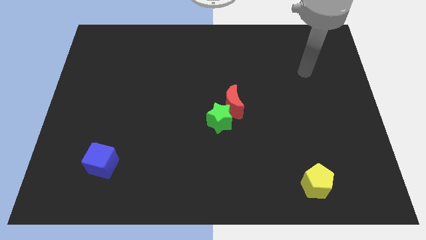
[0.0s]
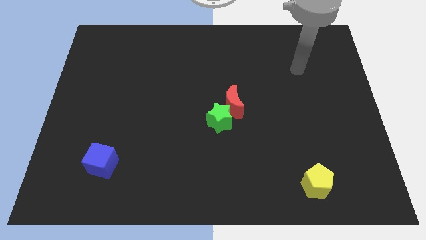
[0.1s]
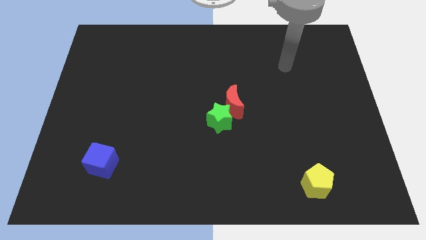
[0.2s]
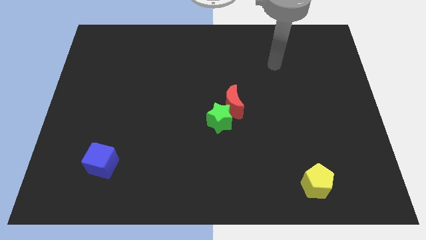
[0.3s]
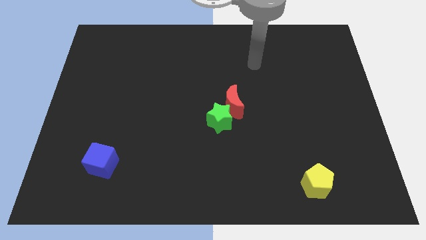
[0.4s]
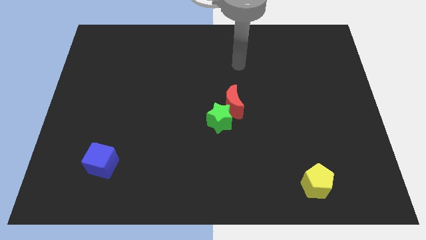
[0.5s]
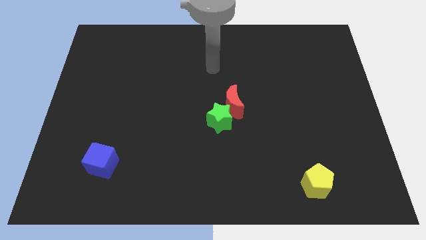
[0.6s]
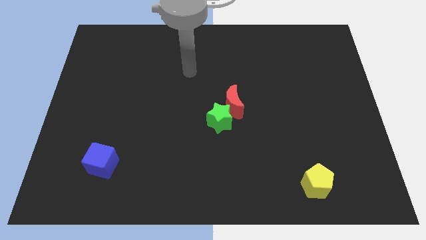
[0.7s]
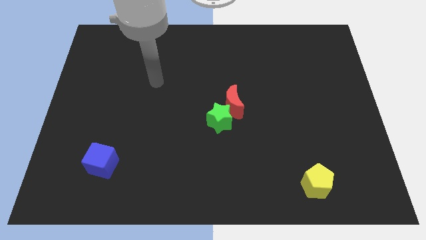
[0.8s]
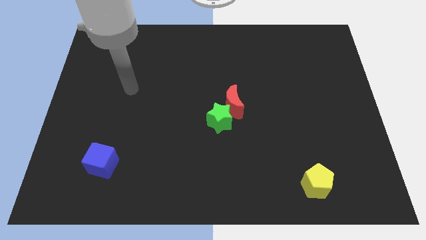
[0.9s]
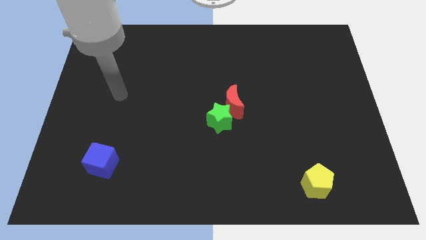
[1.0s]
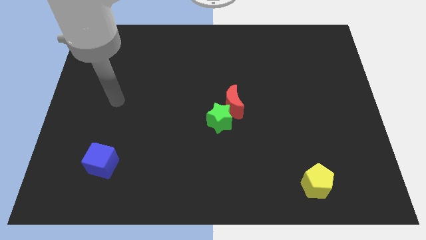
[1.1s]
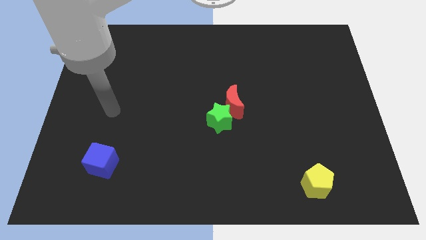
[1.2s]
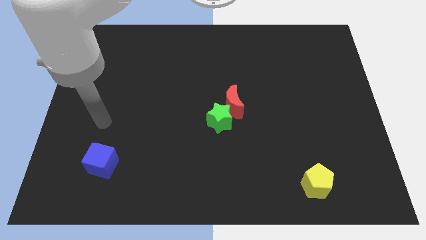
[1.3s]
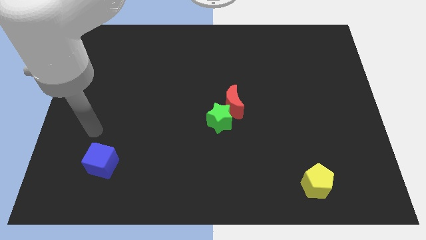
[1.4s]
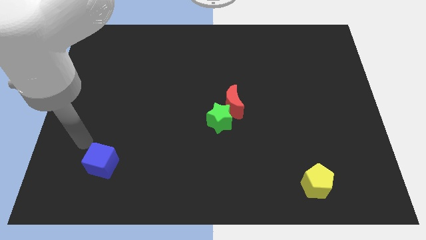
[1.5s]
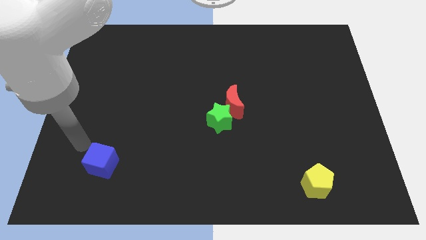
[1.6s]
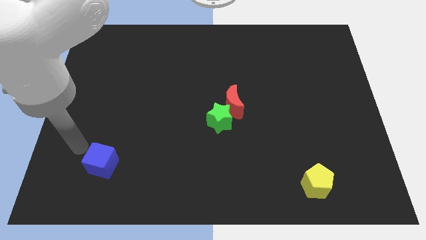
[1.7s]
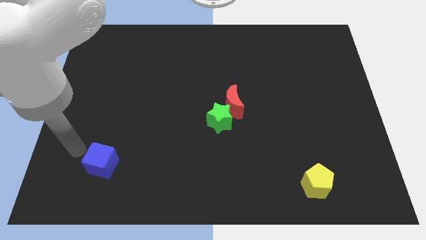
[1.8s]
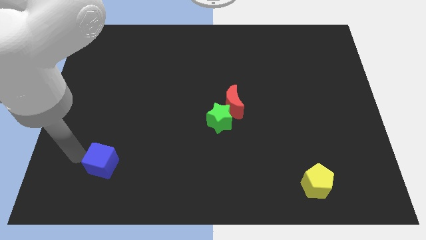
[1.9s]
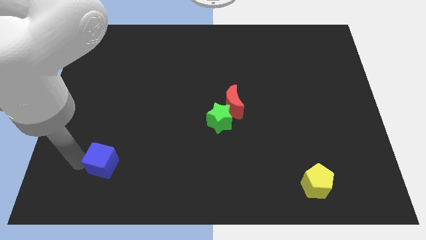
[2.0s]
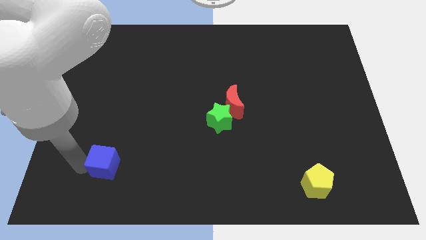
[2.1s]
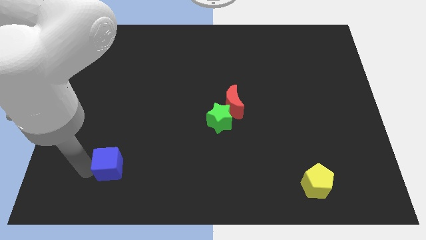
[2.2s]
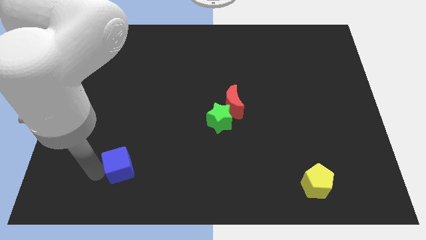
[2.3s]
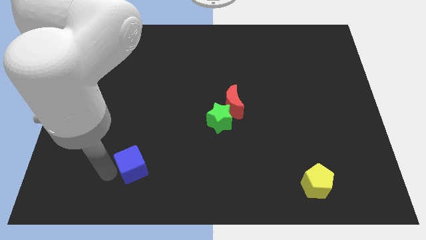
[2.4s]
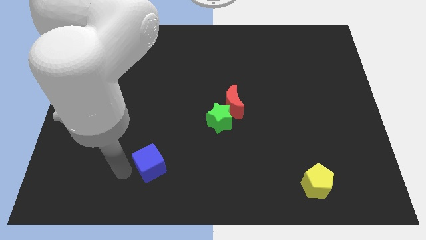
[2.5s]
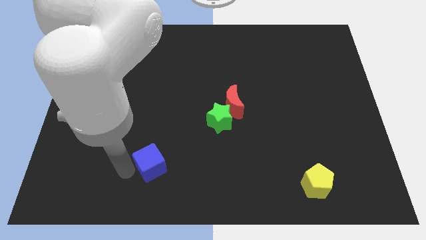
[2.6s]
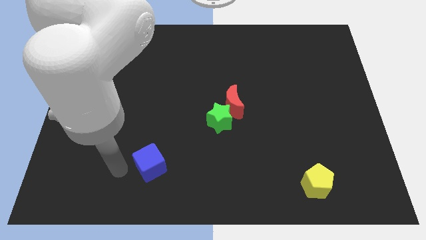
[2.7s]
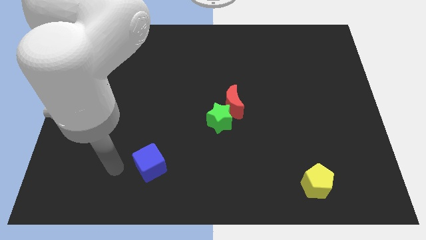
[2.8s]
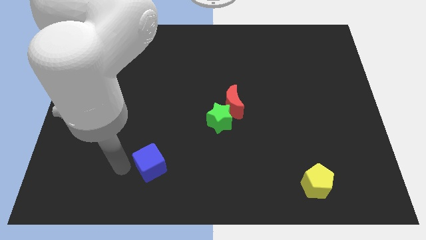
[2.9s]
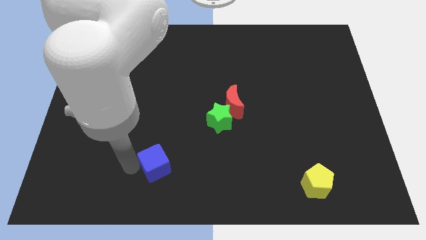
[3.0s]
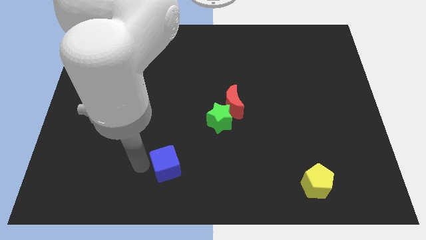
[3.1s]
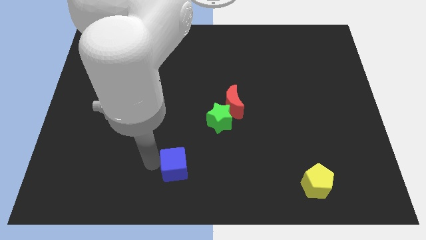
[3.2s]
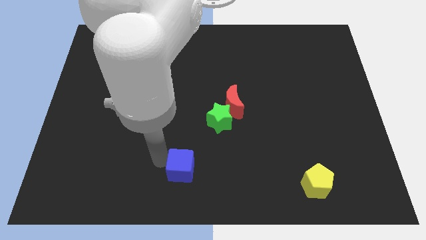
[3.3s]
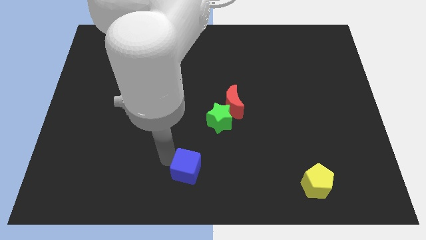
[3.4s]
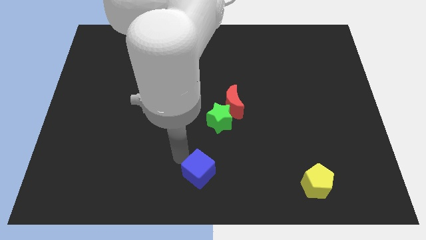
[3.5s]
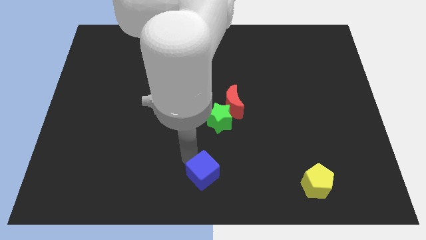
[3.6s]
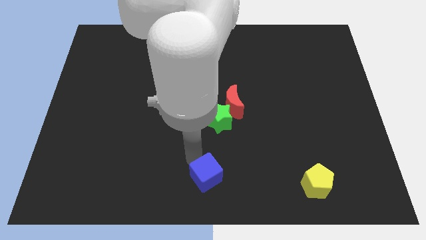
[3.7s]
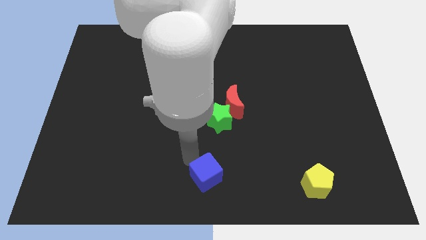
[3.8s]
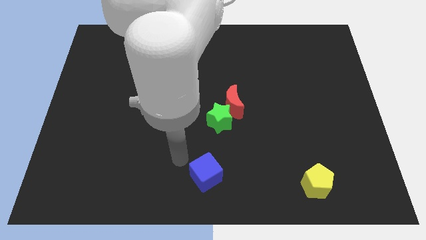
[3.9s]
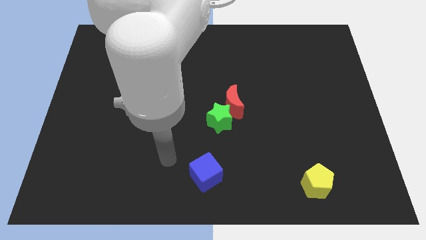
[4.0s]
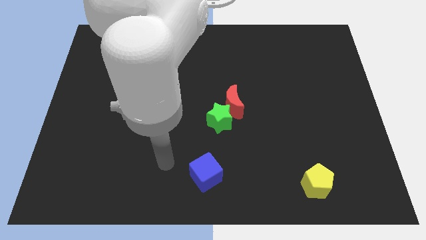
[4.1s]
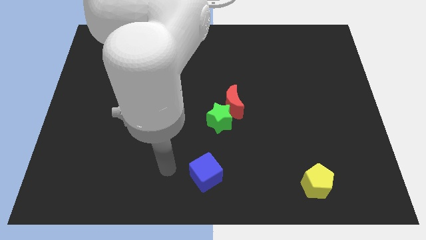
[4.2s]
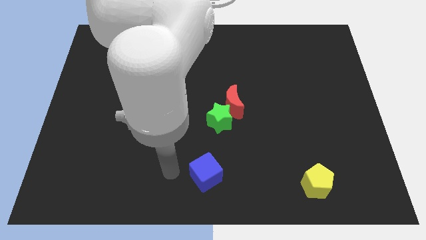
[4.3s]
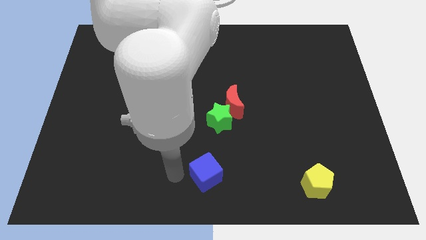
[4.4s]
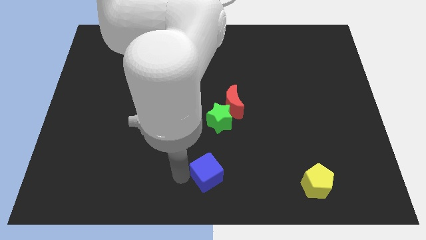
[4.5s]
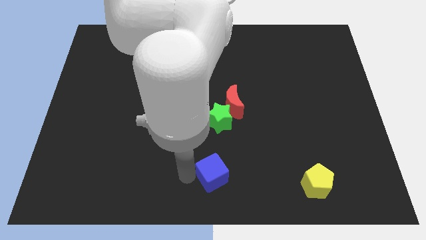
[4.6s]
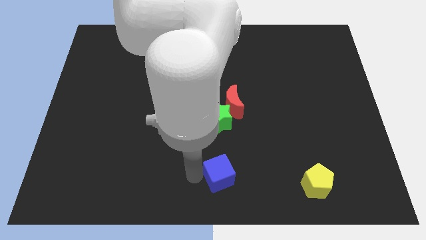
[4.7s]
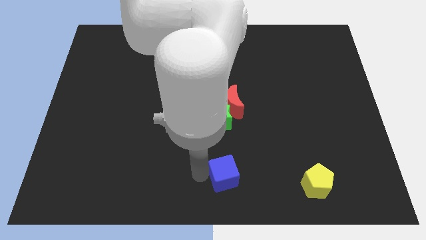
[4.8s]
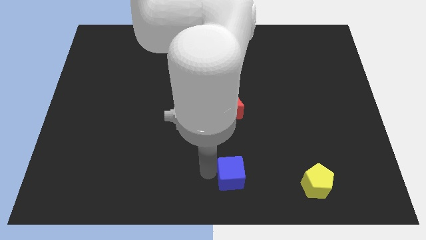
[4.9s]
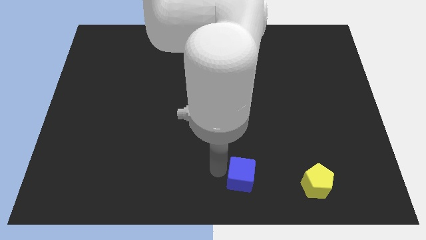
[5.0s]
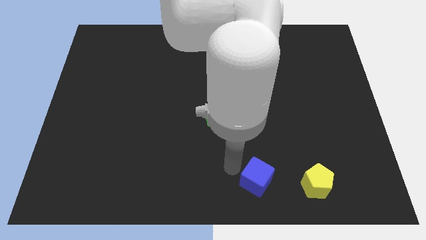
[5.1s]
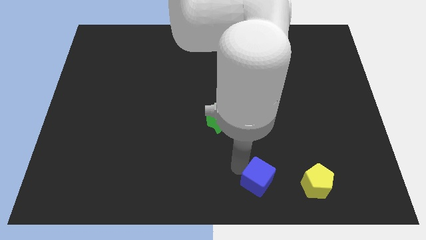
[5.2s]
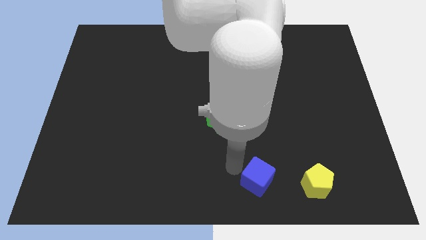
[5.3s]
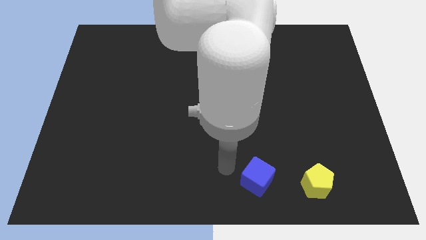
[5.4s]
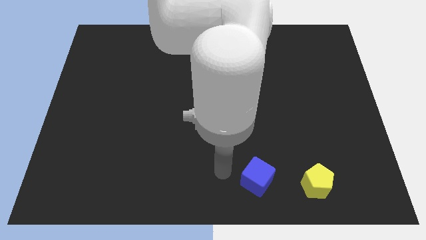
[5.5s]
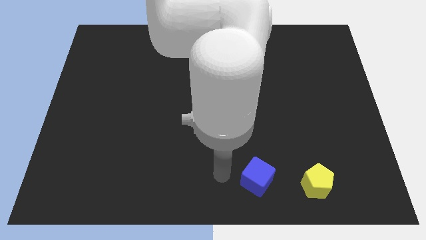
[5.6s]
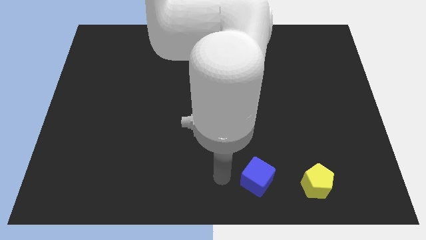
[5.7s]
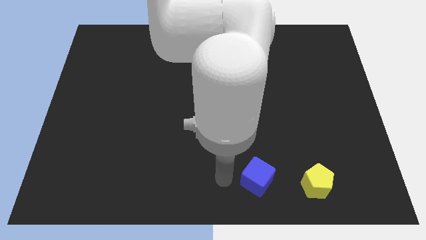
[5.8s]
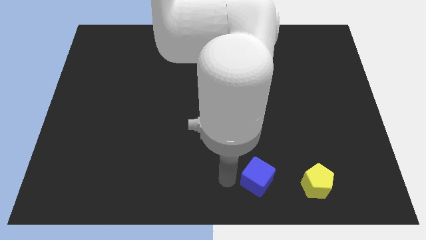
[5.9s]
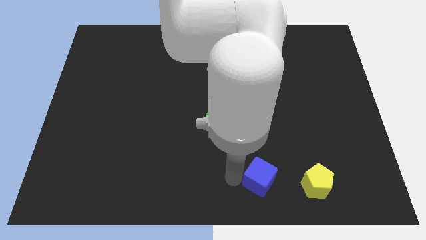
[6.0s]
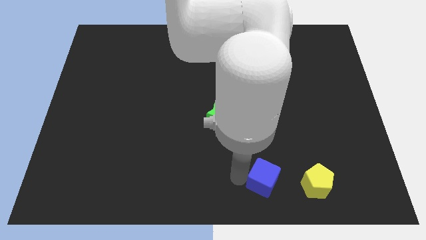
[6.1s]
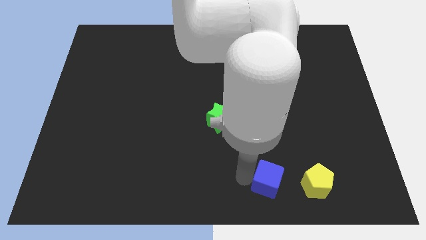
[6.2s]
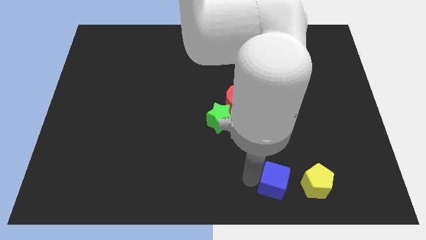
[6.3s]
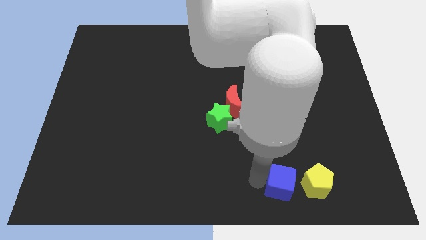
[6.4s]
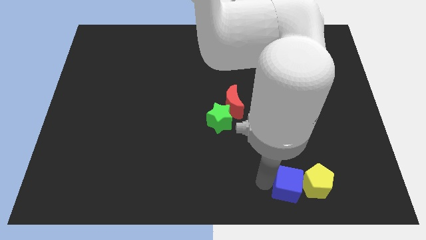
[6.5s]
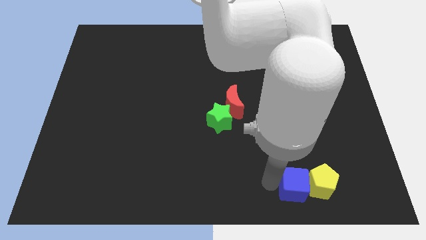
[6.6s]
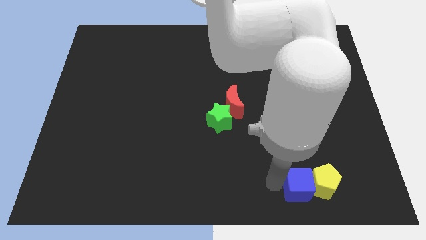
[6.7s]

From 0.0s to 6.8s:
slide the blue cube towards the yellow block

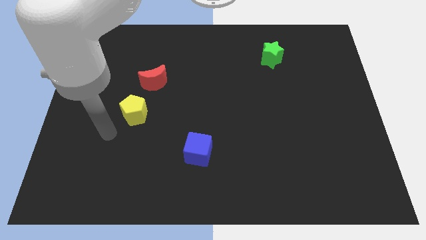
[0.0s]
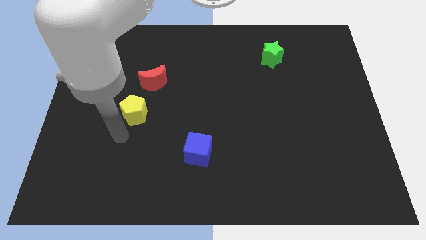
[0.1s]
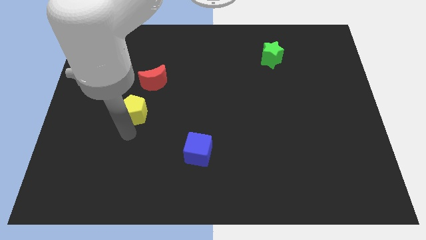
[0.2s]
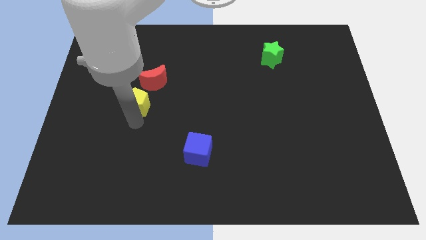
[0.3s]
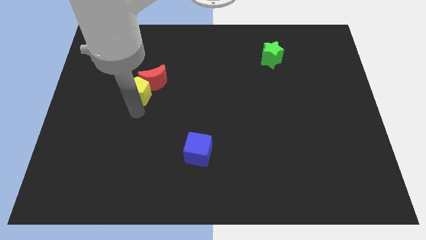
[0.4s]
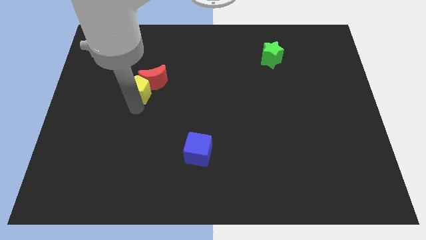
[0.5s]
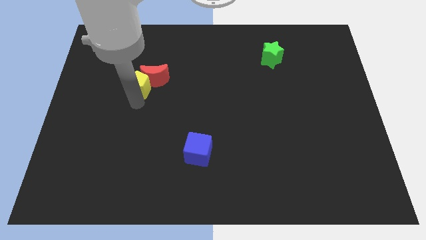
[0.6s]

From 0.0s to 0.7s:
slide the yellow block to the red moon

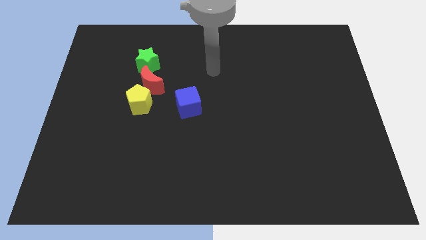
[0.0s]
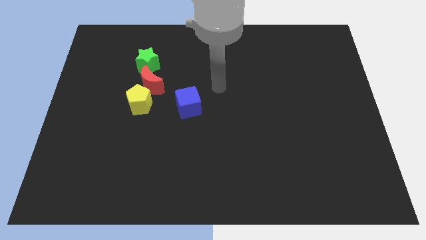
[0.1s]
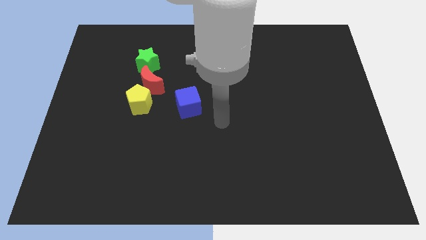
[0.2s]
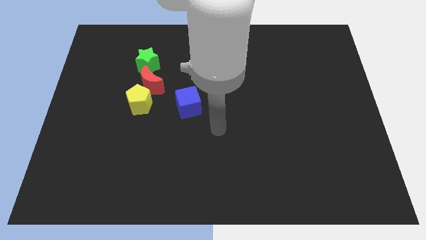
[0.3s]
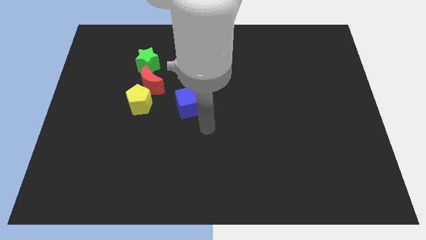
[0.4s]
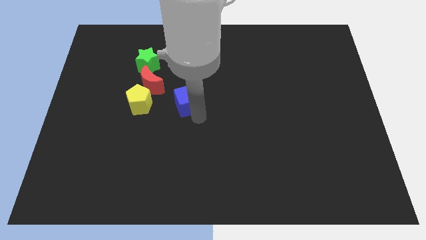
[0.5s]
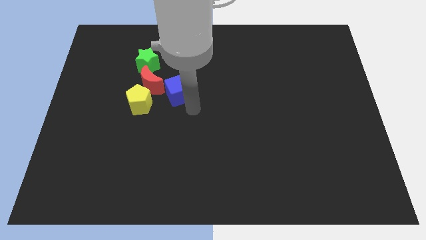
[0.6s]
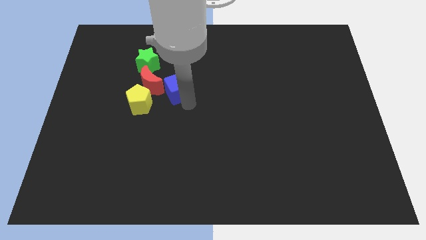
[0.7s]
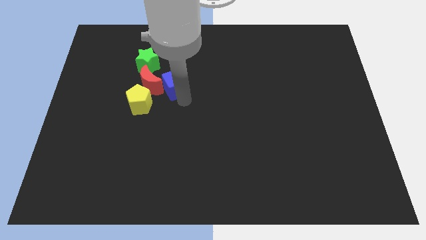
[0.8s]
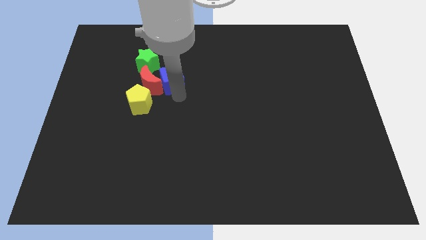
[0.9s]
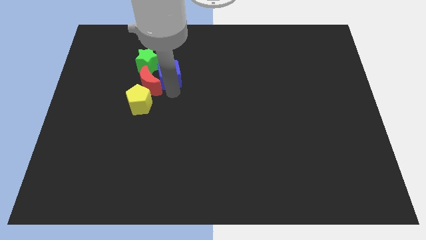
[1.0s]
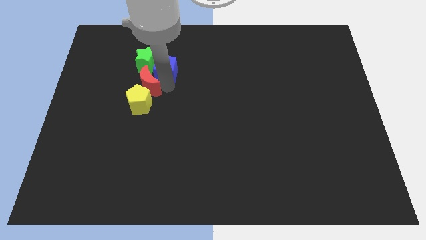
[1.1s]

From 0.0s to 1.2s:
slide the blue block next to the red moon

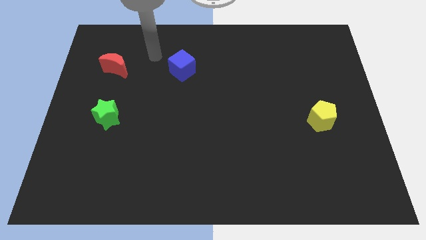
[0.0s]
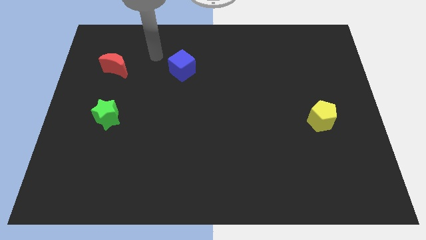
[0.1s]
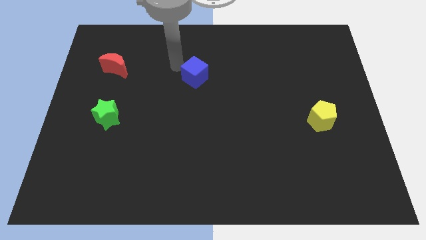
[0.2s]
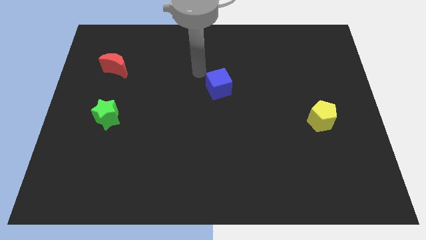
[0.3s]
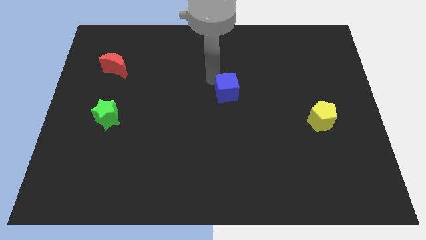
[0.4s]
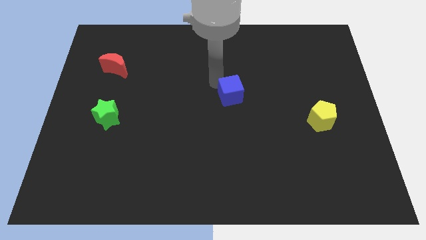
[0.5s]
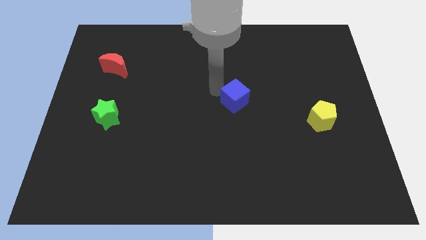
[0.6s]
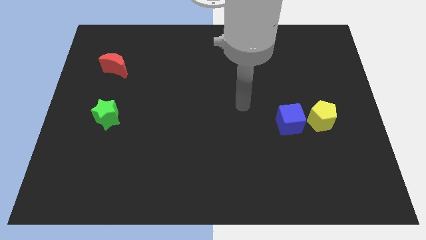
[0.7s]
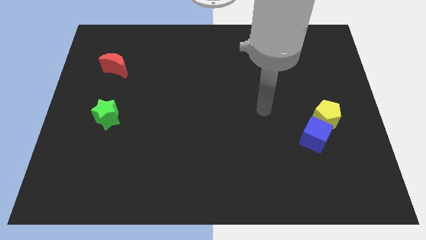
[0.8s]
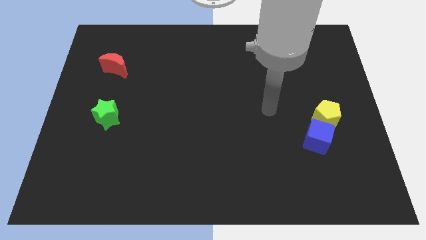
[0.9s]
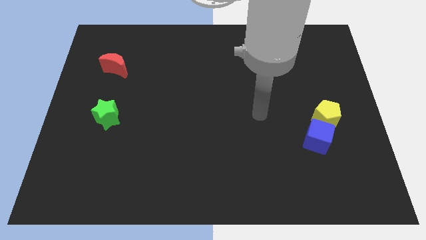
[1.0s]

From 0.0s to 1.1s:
move the cube close to the yellow pentagon
